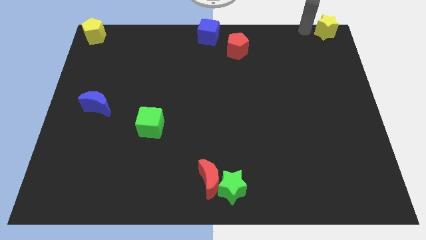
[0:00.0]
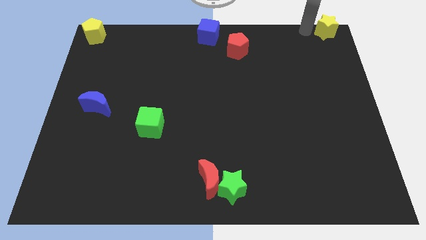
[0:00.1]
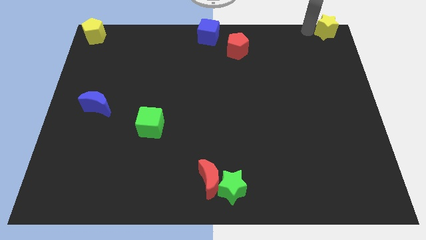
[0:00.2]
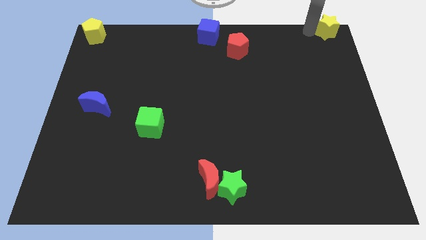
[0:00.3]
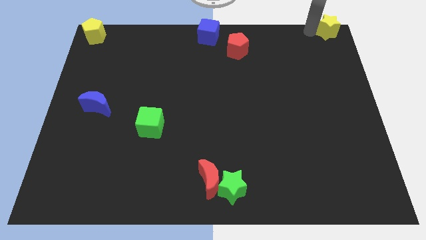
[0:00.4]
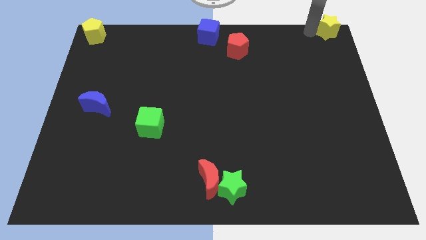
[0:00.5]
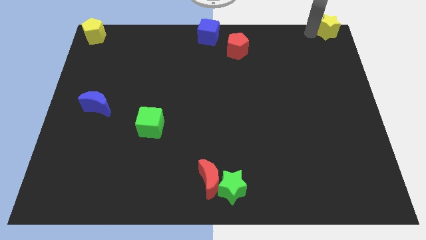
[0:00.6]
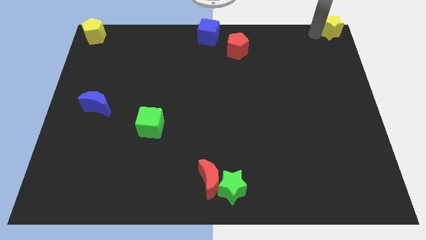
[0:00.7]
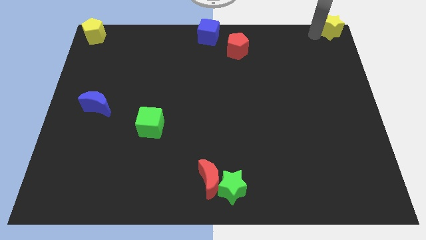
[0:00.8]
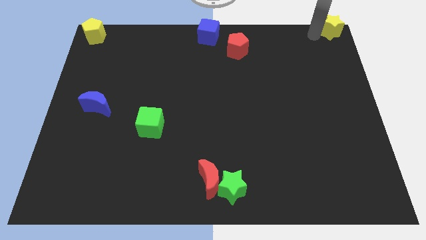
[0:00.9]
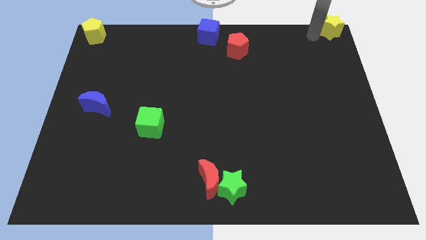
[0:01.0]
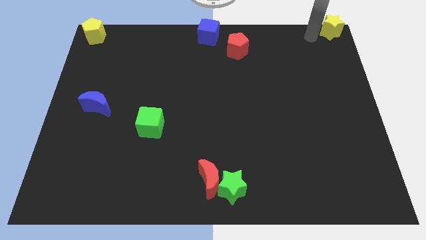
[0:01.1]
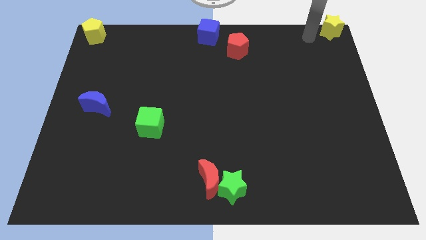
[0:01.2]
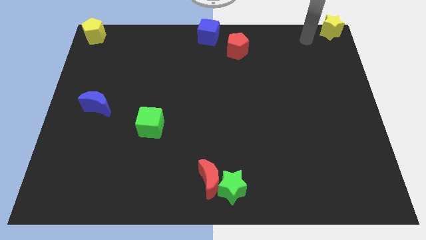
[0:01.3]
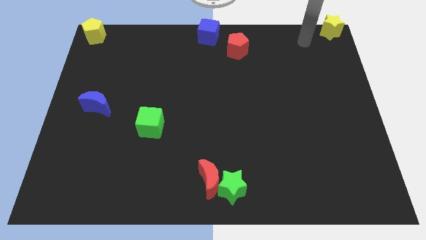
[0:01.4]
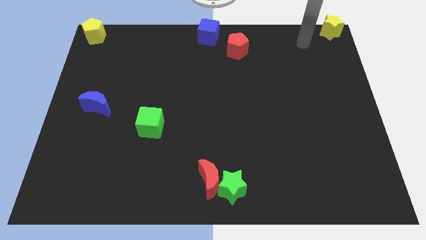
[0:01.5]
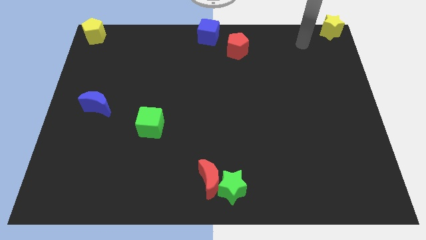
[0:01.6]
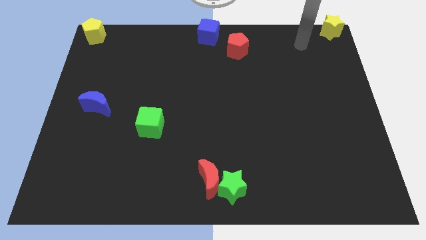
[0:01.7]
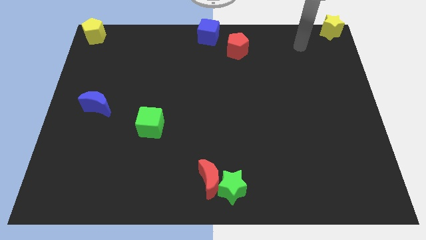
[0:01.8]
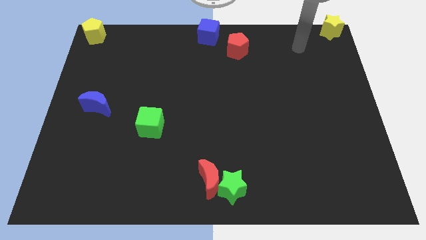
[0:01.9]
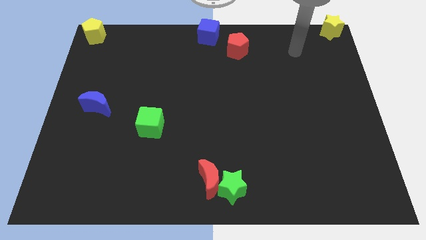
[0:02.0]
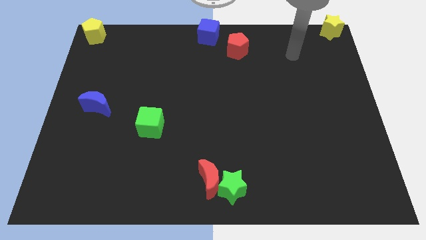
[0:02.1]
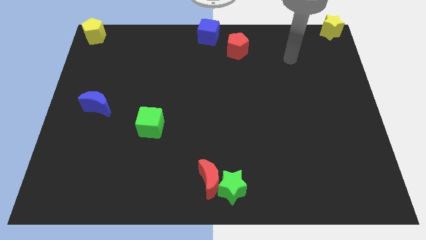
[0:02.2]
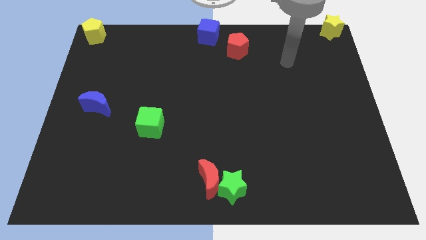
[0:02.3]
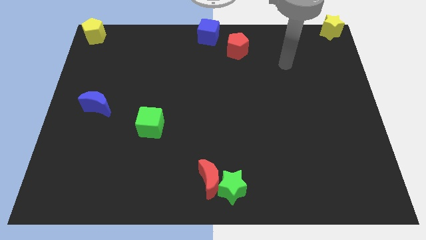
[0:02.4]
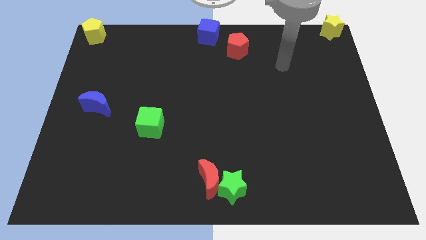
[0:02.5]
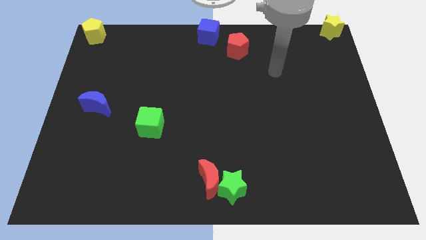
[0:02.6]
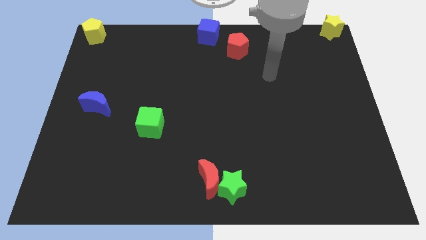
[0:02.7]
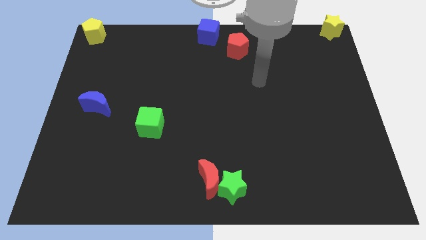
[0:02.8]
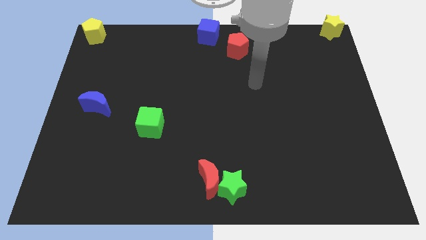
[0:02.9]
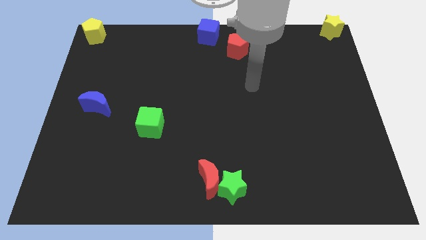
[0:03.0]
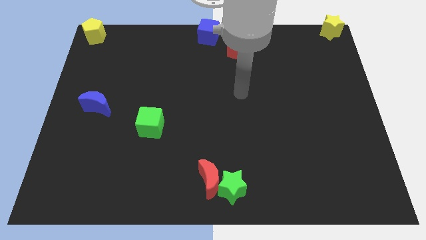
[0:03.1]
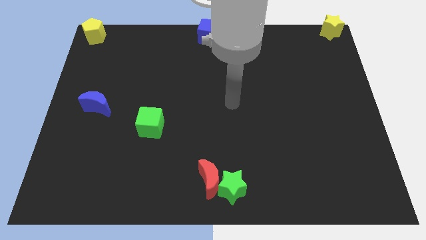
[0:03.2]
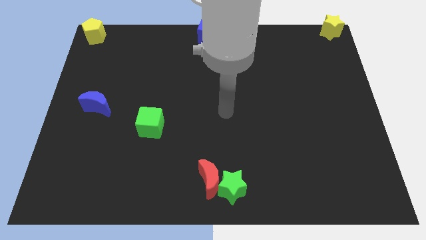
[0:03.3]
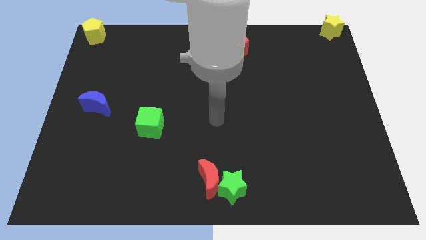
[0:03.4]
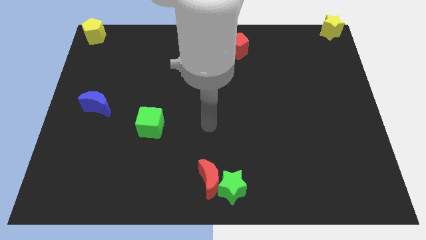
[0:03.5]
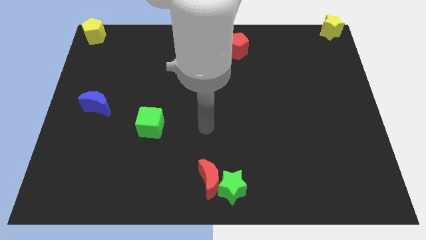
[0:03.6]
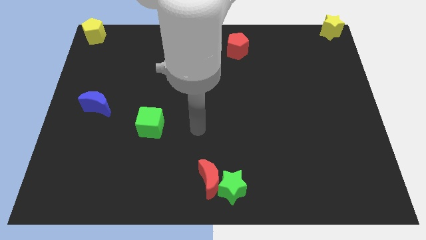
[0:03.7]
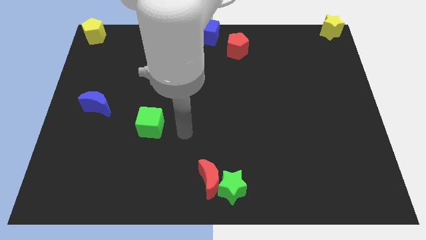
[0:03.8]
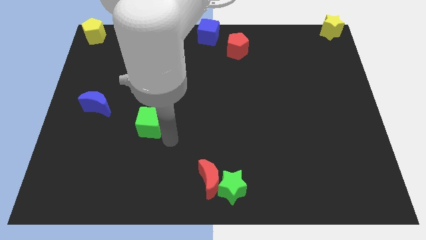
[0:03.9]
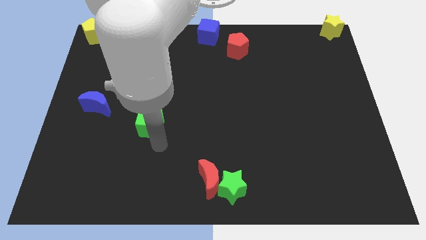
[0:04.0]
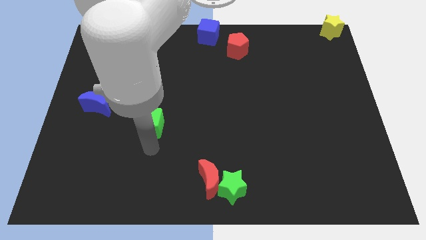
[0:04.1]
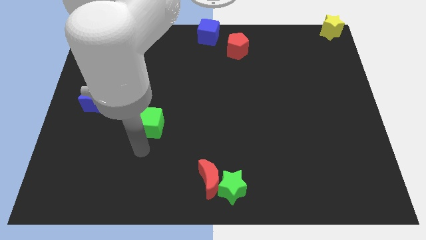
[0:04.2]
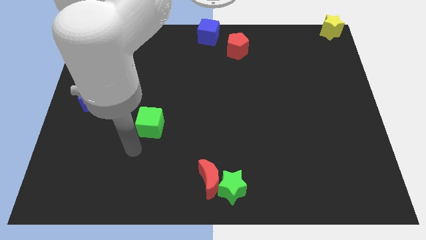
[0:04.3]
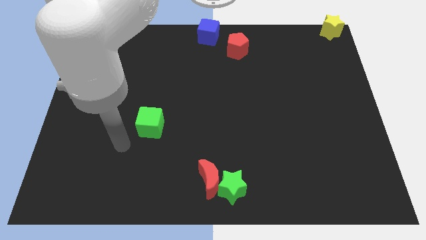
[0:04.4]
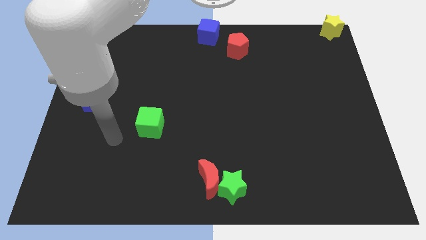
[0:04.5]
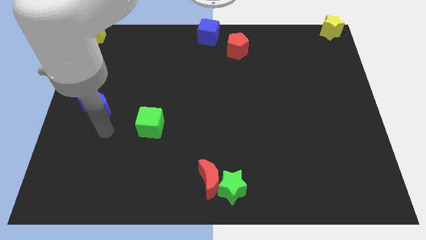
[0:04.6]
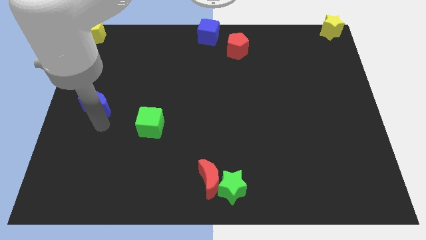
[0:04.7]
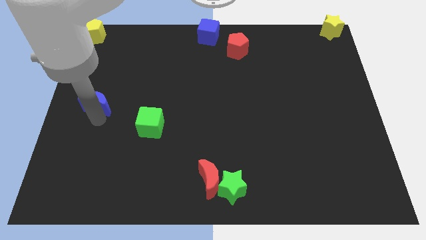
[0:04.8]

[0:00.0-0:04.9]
touch the blue crescent with the help of your arm

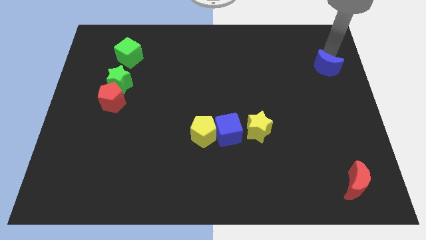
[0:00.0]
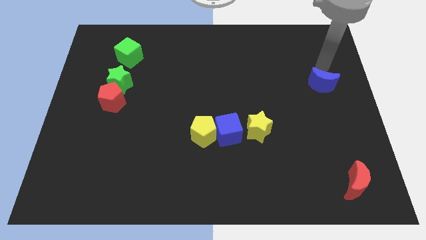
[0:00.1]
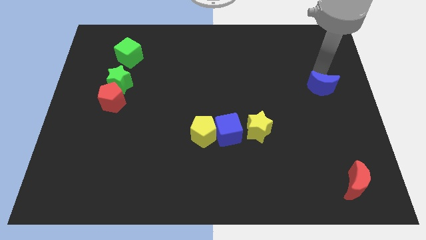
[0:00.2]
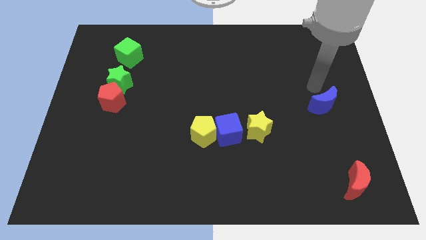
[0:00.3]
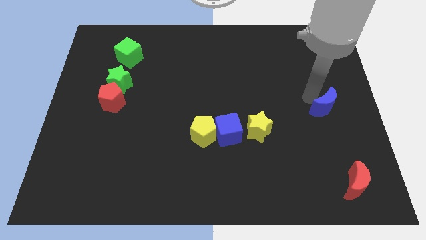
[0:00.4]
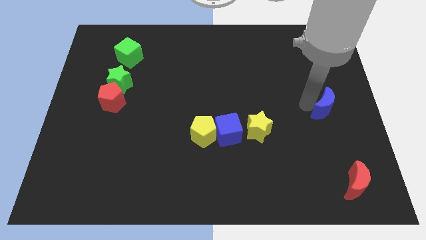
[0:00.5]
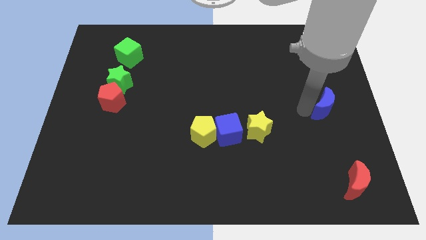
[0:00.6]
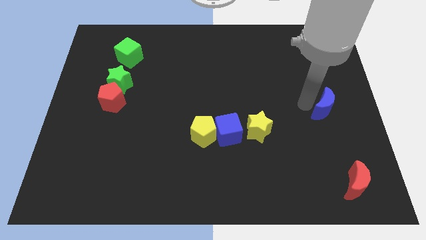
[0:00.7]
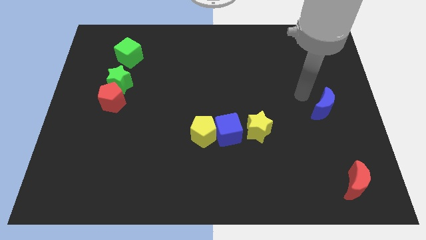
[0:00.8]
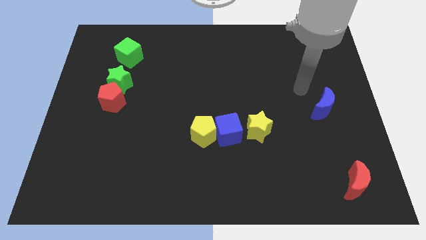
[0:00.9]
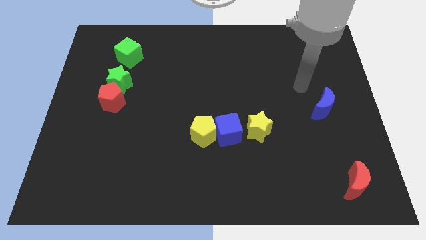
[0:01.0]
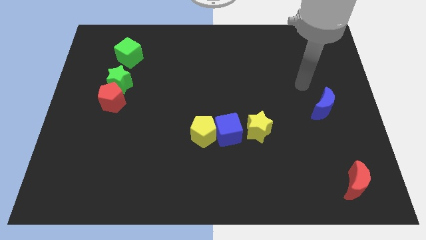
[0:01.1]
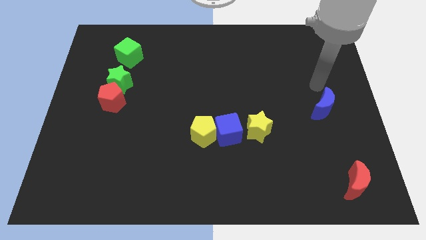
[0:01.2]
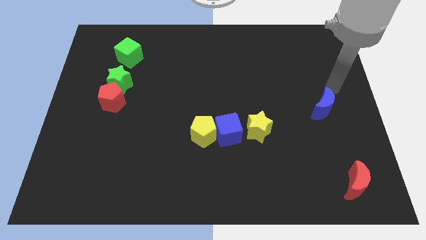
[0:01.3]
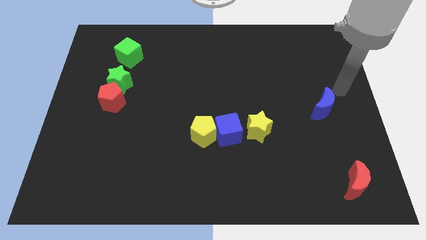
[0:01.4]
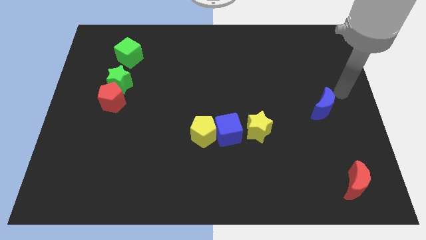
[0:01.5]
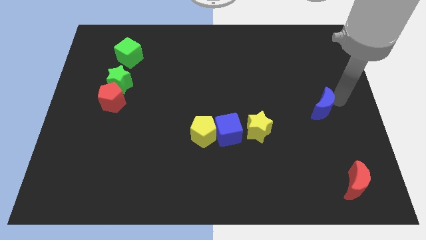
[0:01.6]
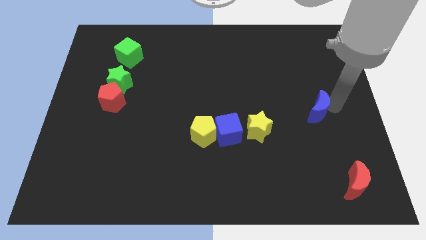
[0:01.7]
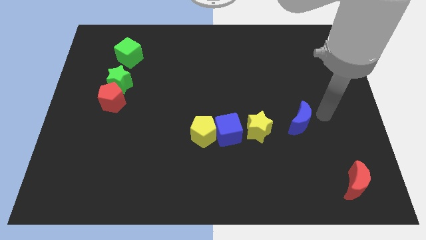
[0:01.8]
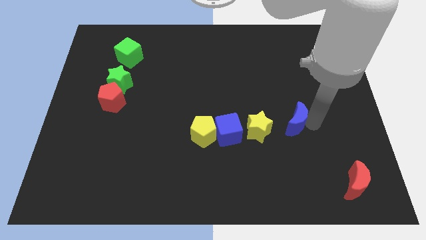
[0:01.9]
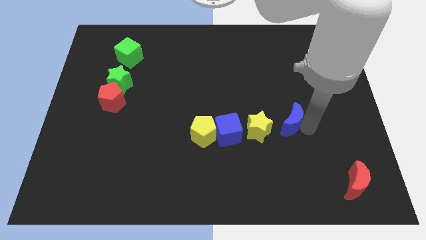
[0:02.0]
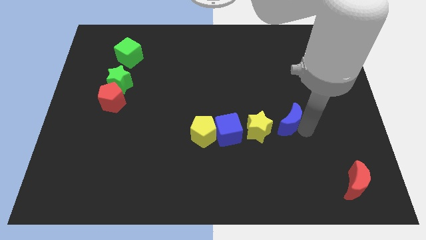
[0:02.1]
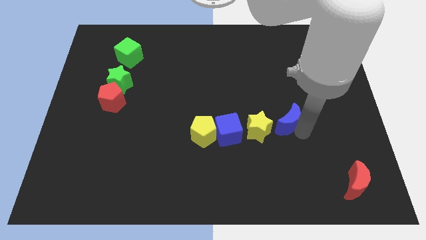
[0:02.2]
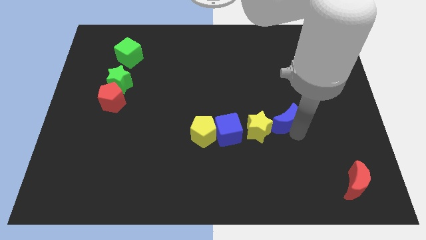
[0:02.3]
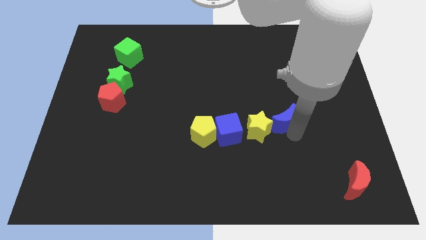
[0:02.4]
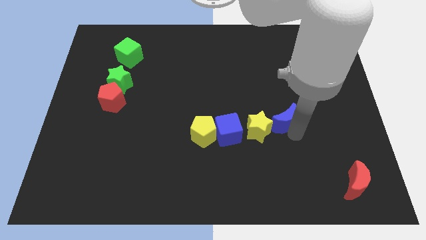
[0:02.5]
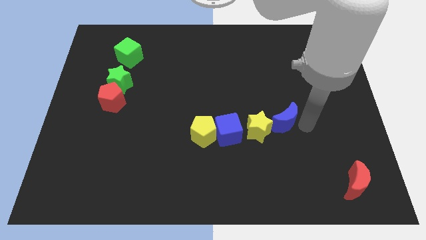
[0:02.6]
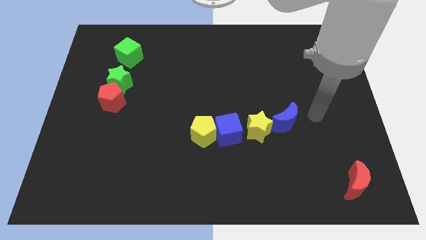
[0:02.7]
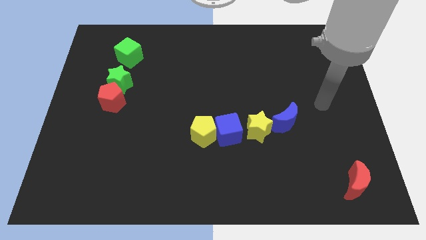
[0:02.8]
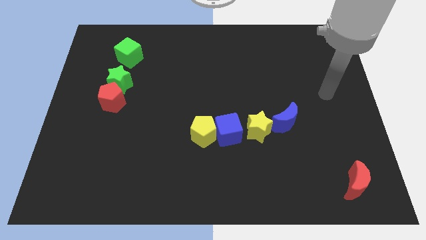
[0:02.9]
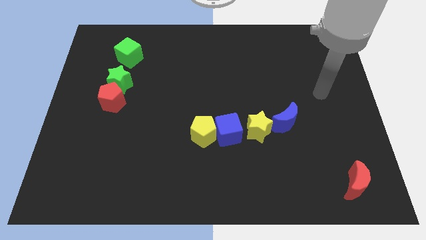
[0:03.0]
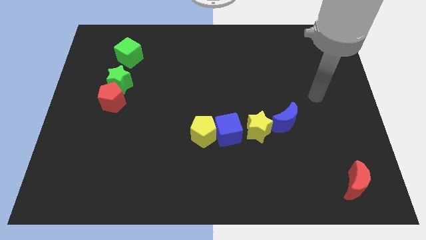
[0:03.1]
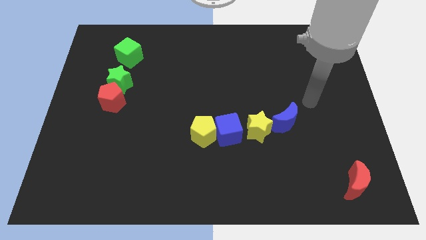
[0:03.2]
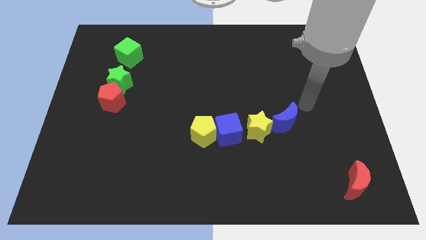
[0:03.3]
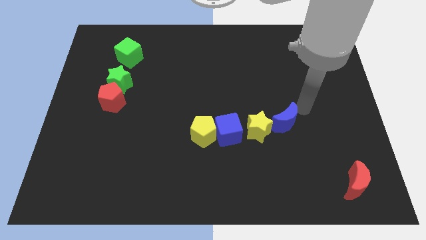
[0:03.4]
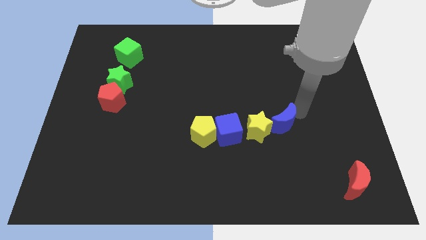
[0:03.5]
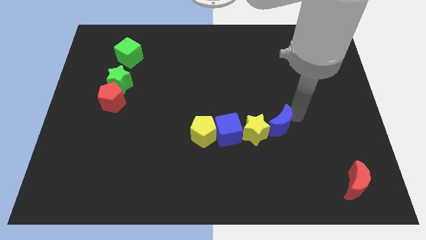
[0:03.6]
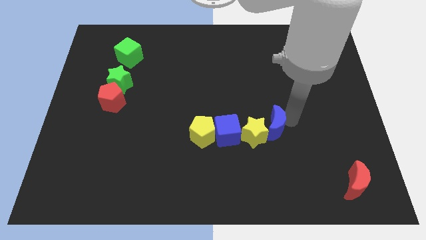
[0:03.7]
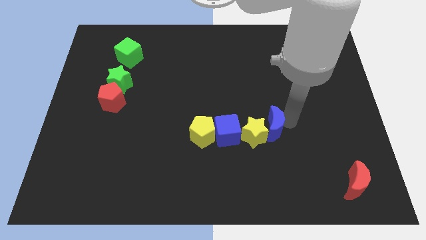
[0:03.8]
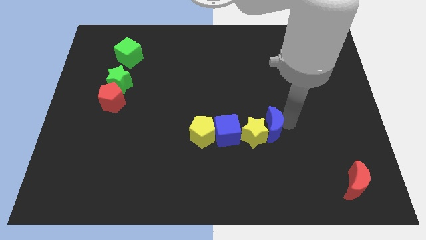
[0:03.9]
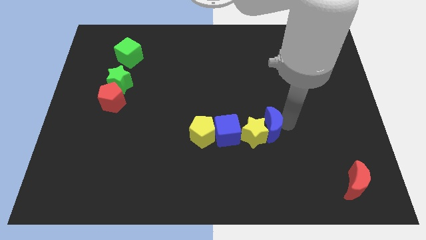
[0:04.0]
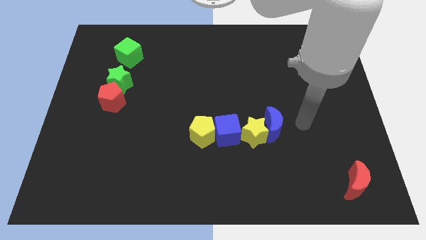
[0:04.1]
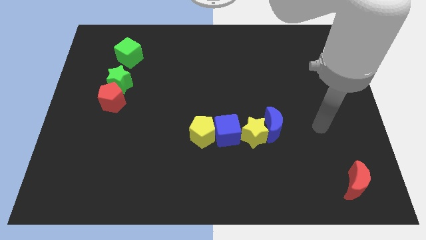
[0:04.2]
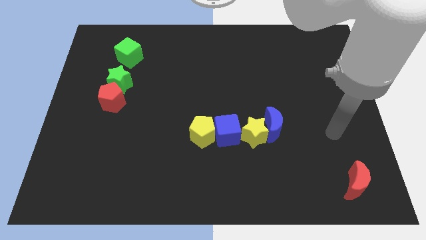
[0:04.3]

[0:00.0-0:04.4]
move the blue crescent to the right of the yellow star
